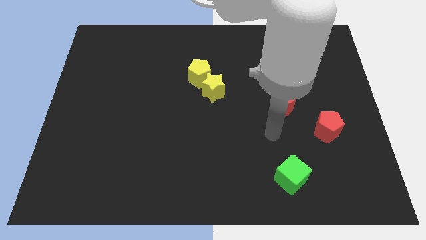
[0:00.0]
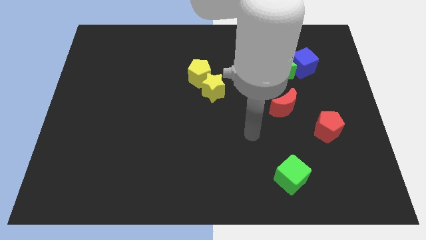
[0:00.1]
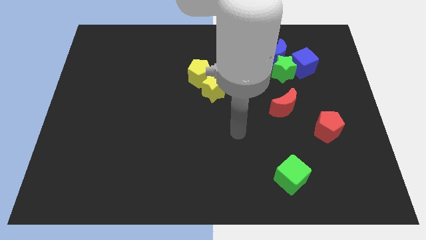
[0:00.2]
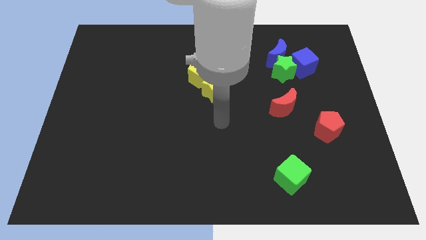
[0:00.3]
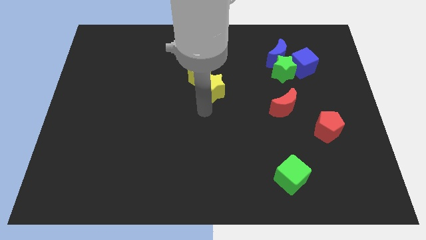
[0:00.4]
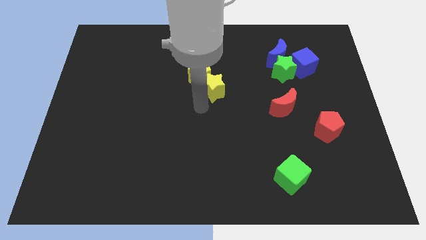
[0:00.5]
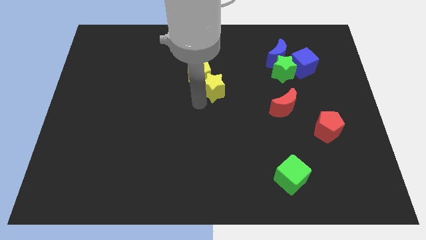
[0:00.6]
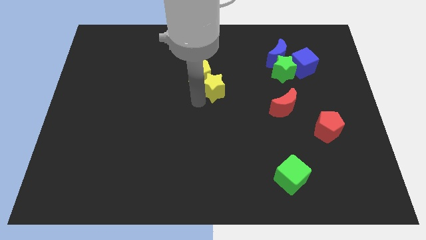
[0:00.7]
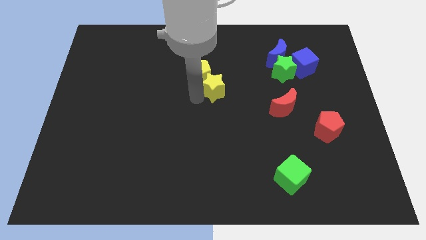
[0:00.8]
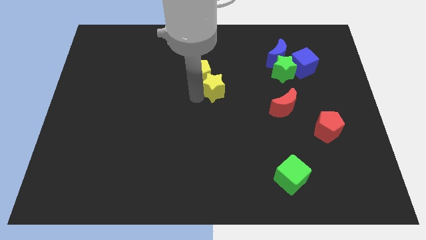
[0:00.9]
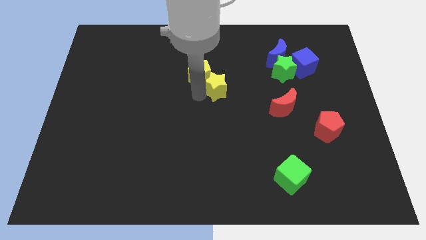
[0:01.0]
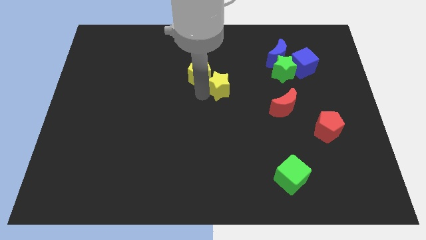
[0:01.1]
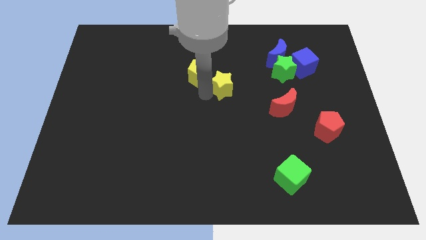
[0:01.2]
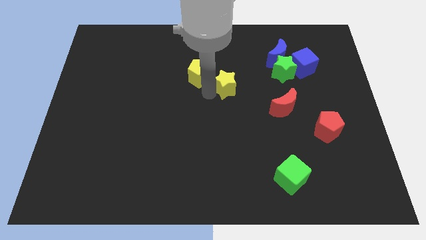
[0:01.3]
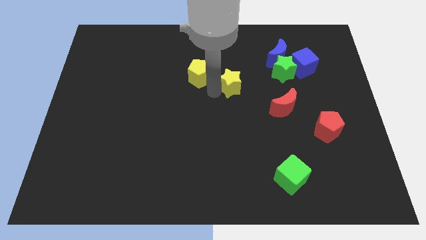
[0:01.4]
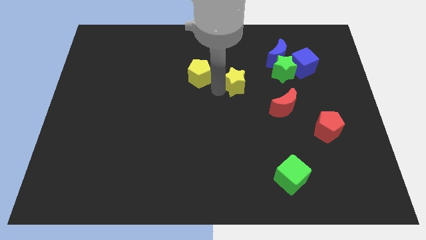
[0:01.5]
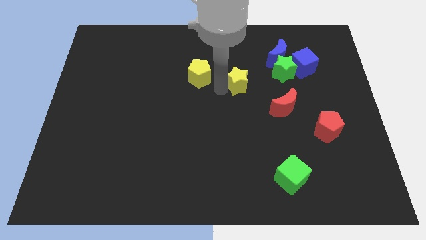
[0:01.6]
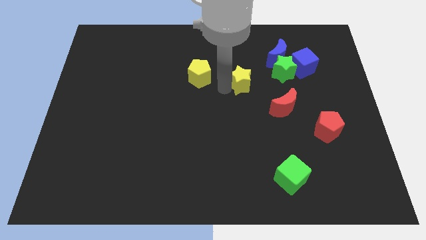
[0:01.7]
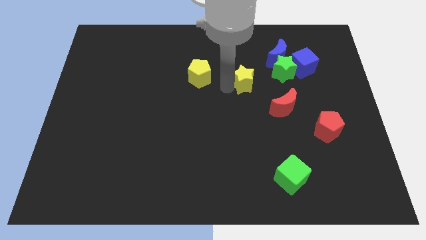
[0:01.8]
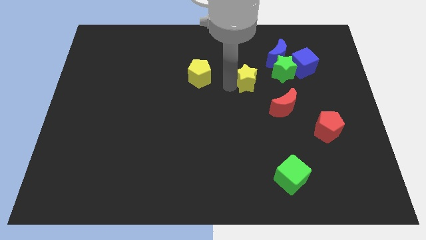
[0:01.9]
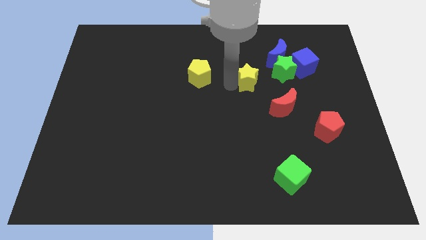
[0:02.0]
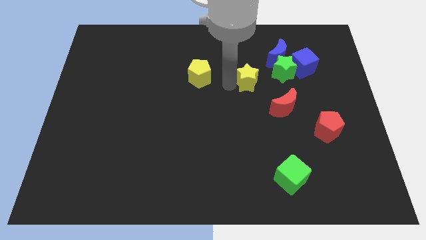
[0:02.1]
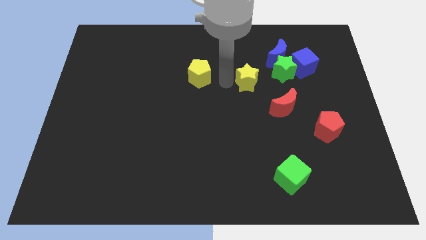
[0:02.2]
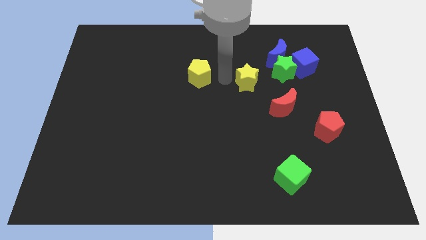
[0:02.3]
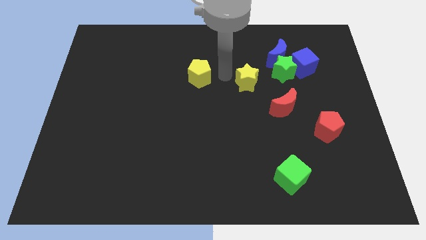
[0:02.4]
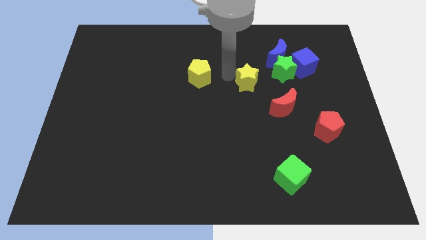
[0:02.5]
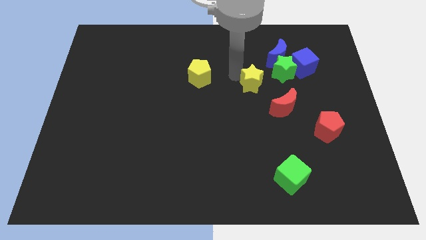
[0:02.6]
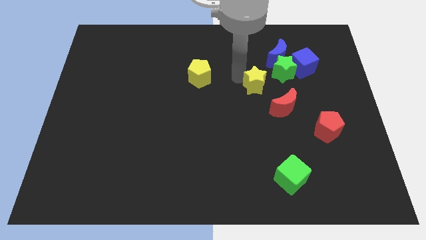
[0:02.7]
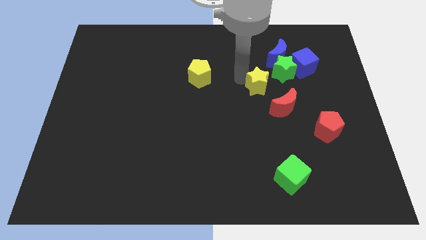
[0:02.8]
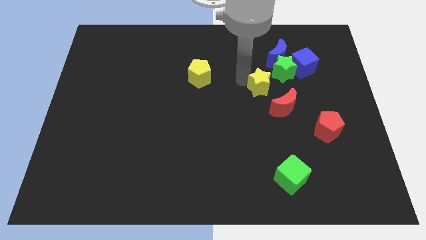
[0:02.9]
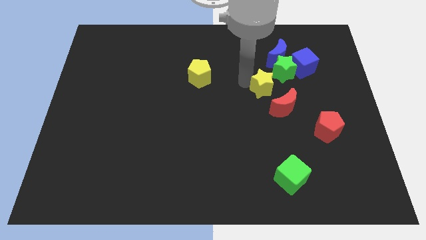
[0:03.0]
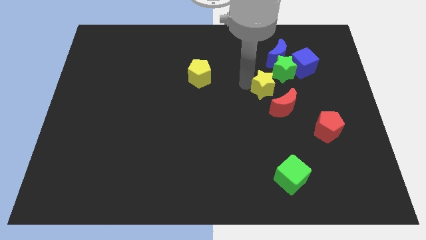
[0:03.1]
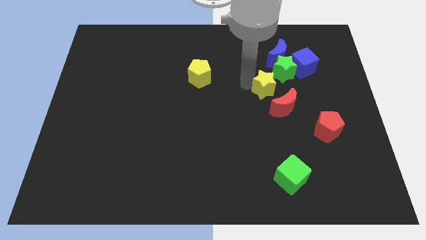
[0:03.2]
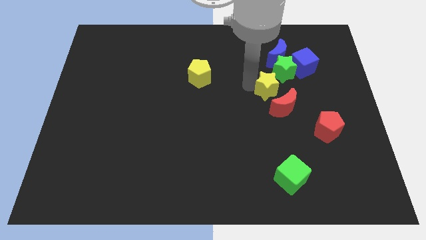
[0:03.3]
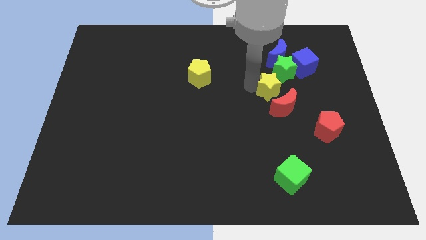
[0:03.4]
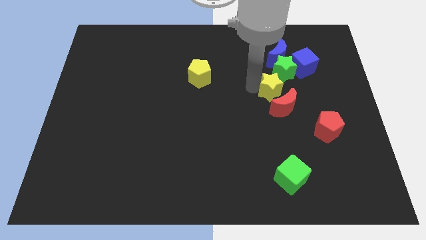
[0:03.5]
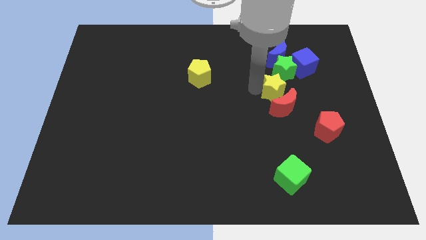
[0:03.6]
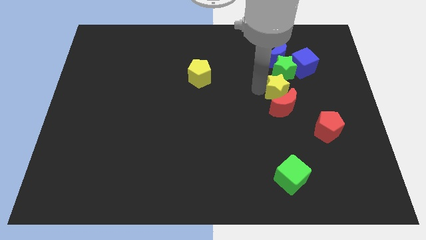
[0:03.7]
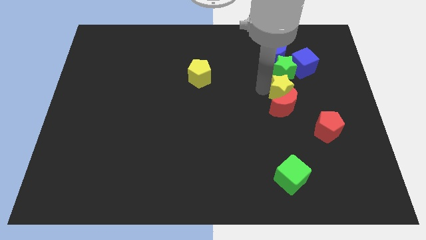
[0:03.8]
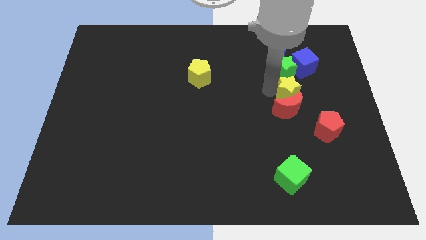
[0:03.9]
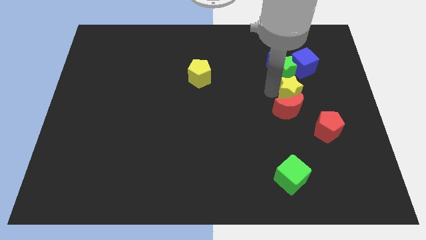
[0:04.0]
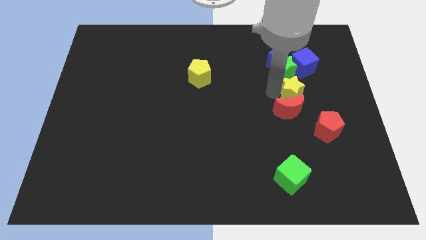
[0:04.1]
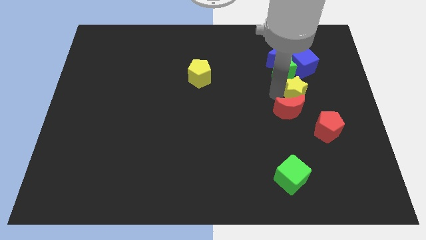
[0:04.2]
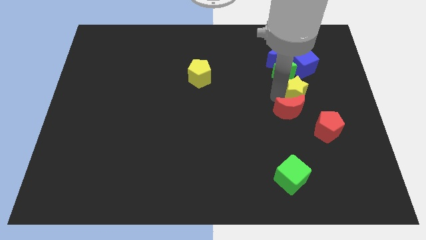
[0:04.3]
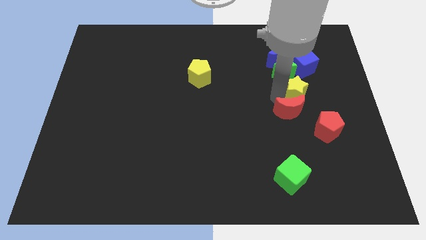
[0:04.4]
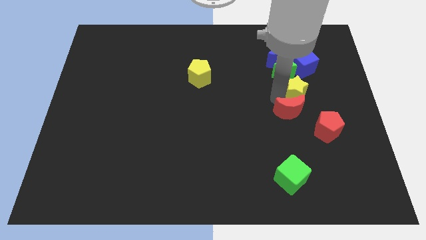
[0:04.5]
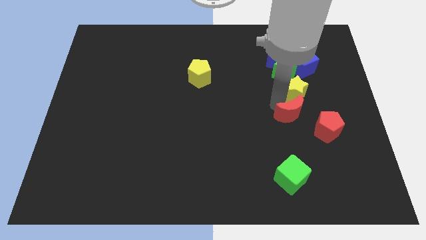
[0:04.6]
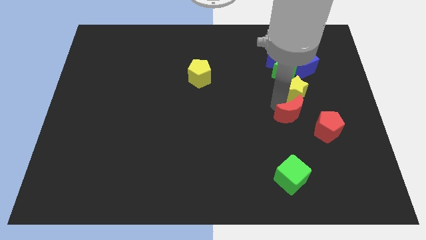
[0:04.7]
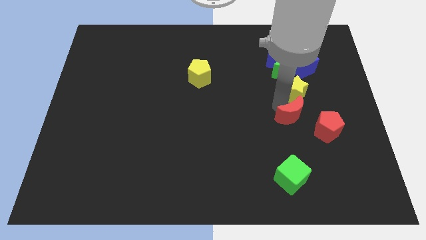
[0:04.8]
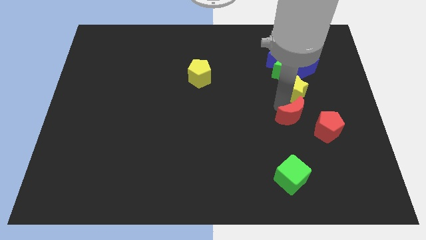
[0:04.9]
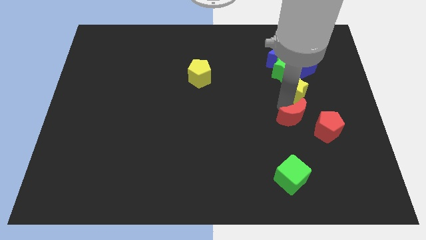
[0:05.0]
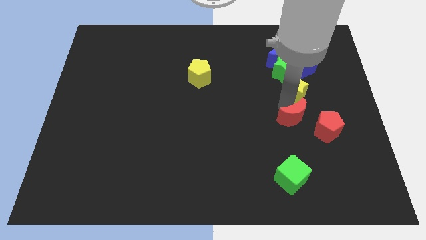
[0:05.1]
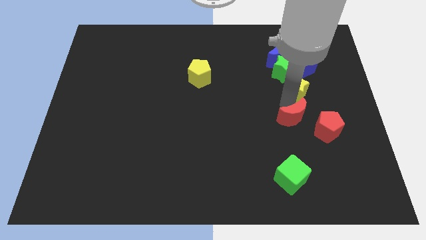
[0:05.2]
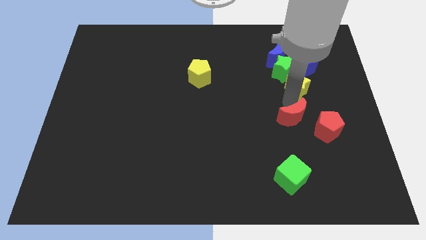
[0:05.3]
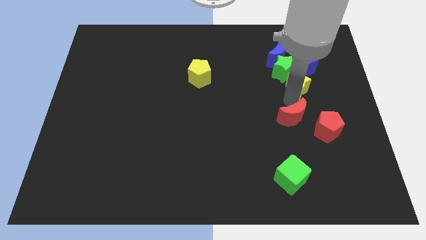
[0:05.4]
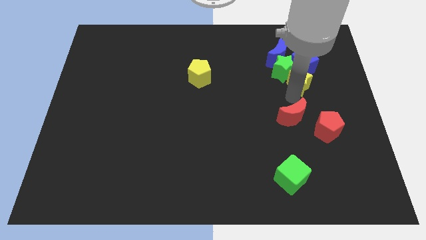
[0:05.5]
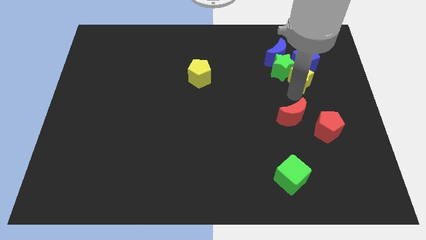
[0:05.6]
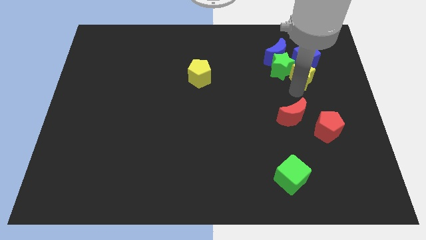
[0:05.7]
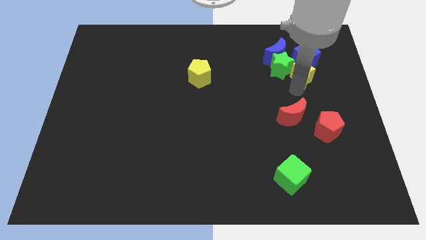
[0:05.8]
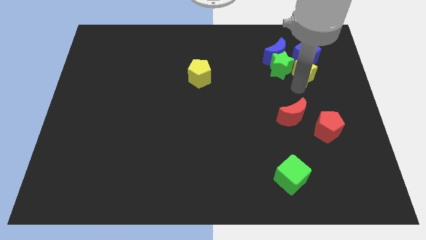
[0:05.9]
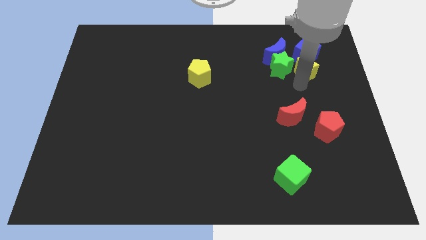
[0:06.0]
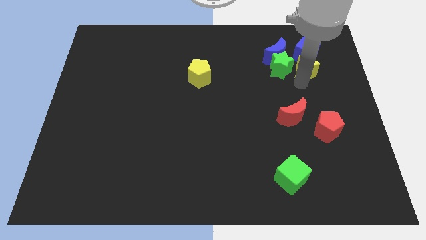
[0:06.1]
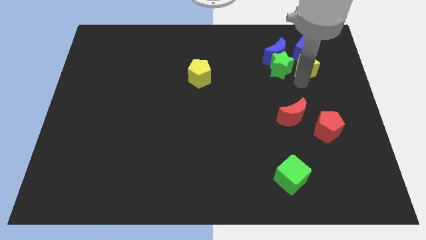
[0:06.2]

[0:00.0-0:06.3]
slide the yellow star close to the blue cube

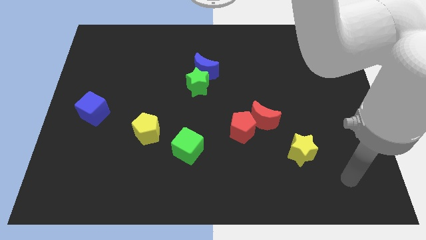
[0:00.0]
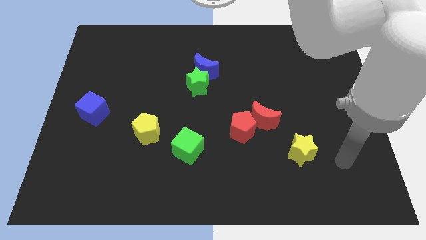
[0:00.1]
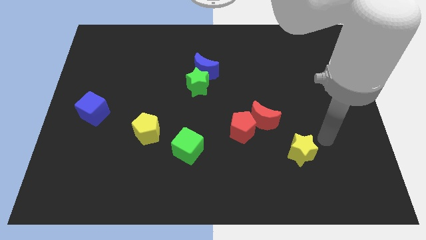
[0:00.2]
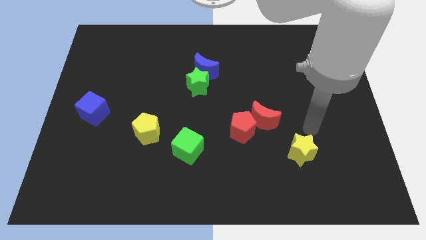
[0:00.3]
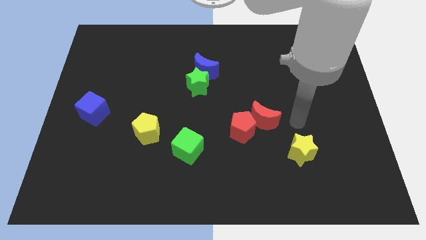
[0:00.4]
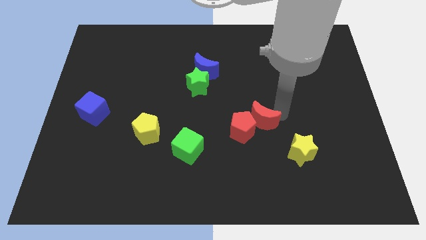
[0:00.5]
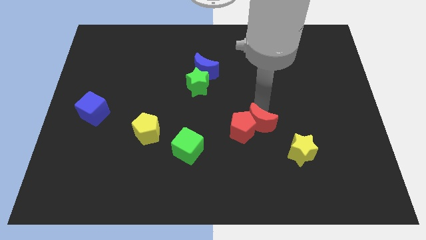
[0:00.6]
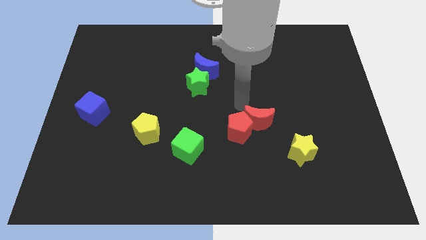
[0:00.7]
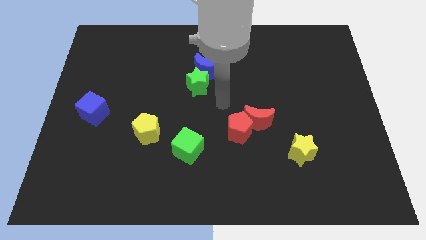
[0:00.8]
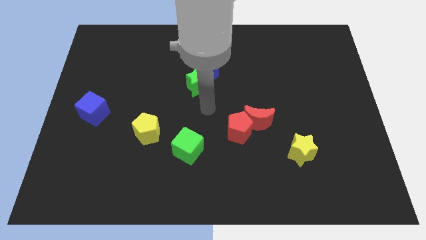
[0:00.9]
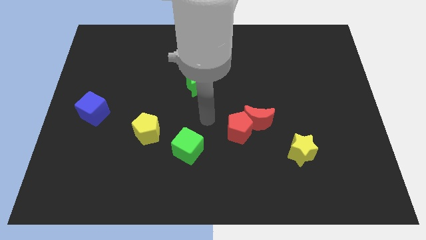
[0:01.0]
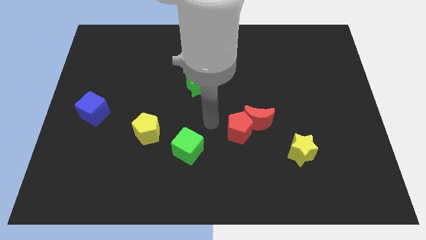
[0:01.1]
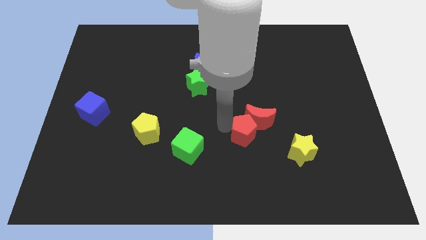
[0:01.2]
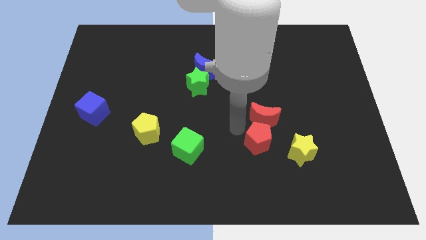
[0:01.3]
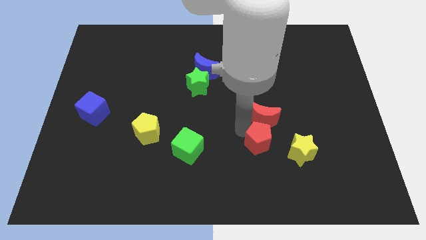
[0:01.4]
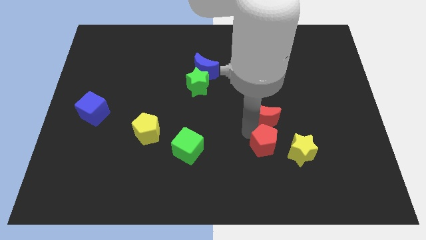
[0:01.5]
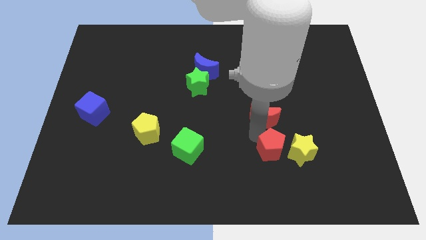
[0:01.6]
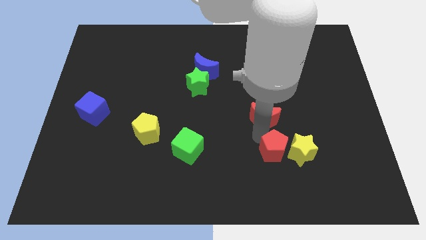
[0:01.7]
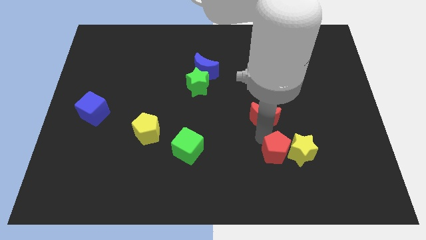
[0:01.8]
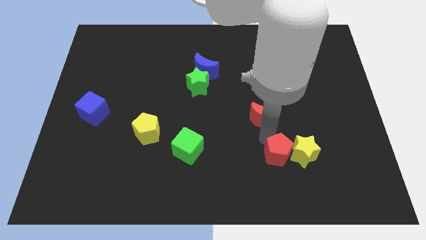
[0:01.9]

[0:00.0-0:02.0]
put the red pentagon next to the yellow star

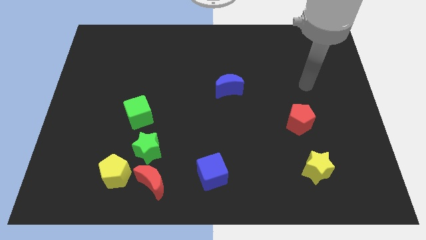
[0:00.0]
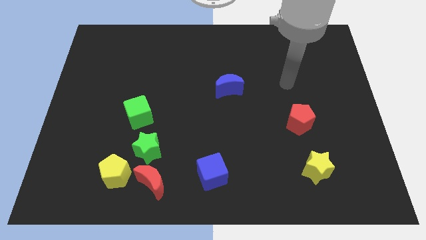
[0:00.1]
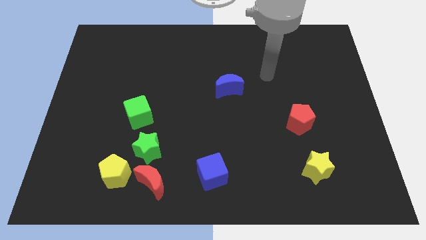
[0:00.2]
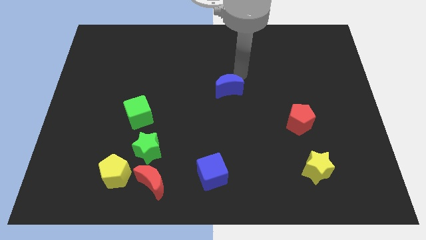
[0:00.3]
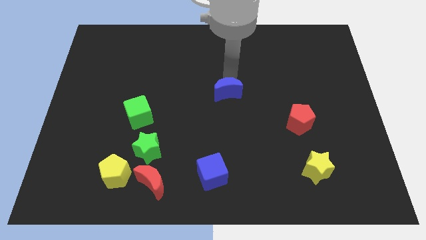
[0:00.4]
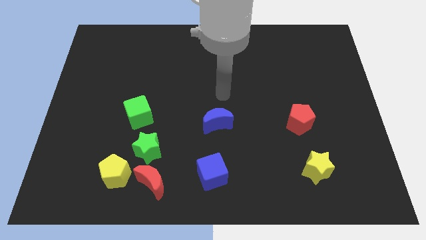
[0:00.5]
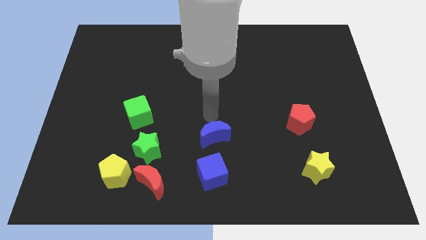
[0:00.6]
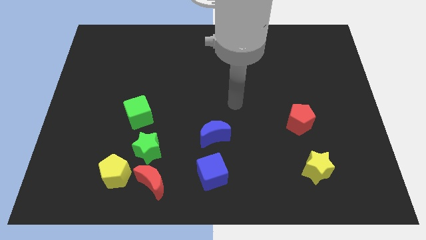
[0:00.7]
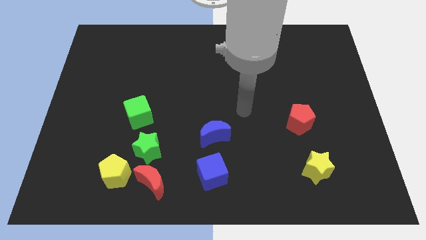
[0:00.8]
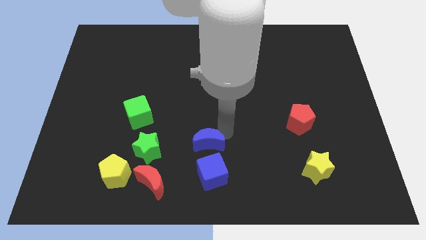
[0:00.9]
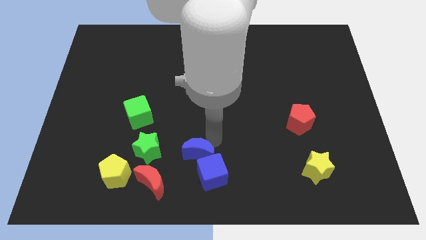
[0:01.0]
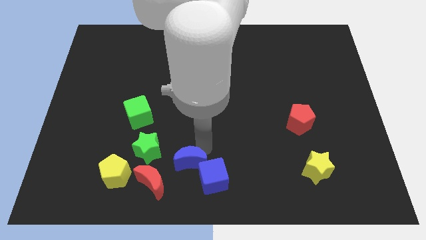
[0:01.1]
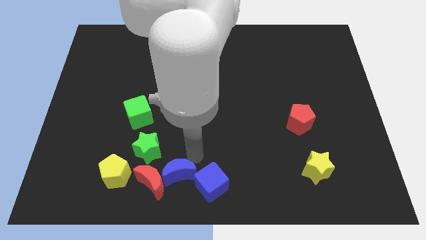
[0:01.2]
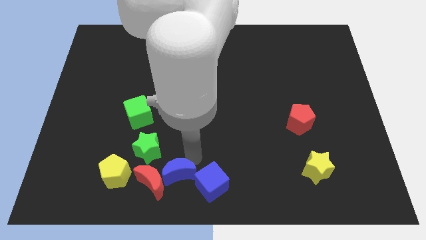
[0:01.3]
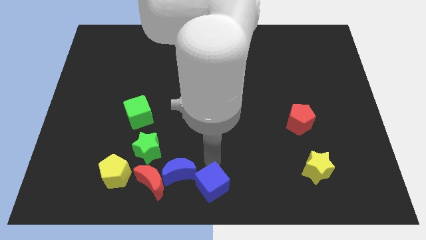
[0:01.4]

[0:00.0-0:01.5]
put the blue moon next to the red moon
